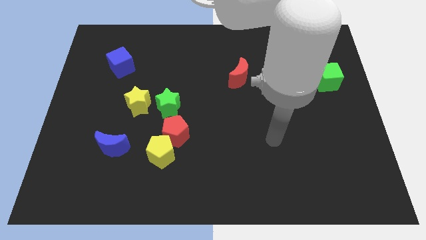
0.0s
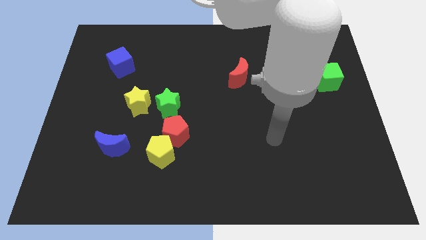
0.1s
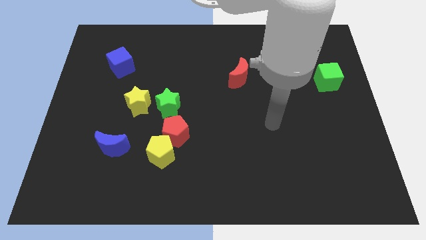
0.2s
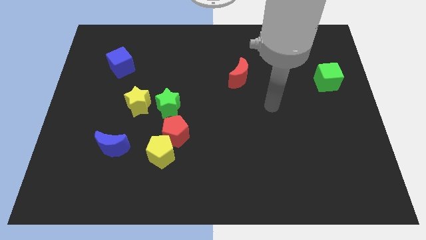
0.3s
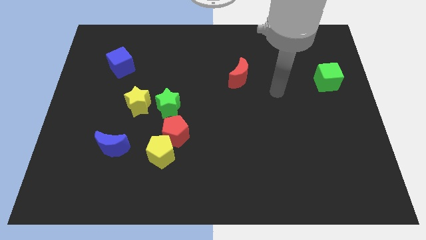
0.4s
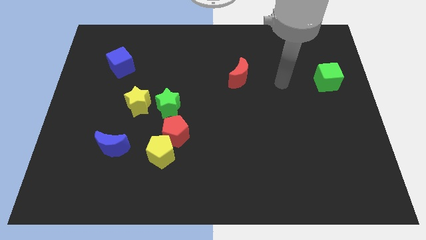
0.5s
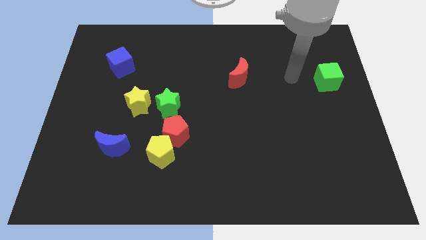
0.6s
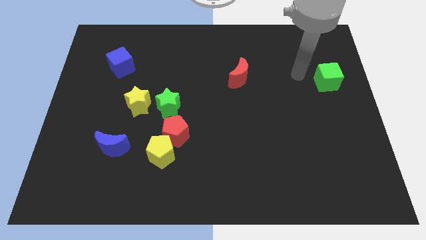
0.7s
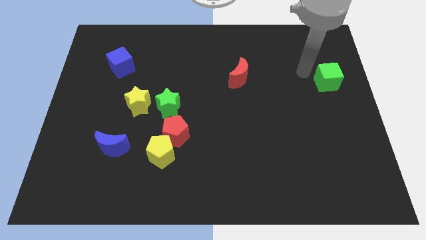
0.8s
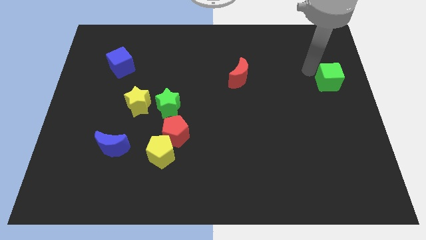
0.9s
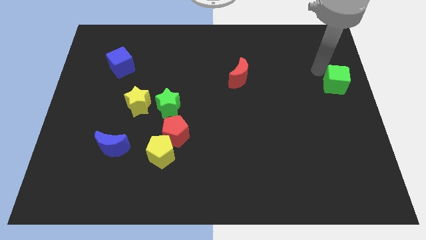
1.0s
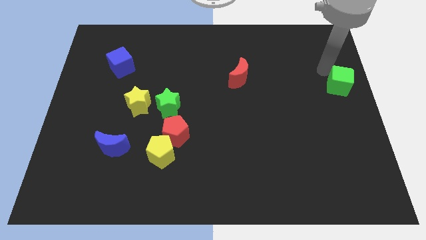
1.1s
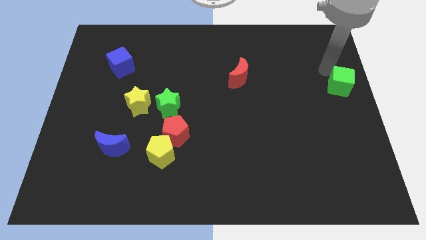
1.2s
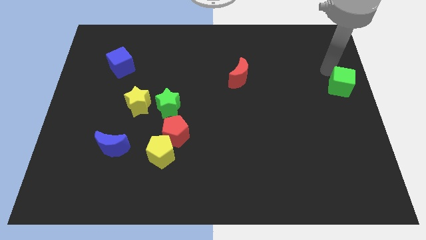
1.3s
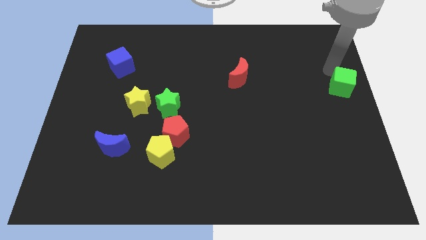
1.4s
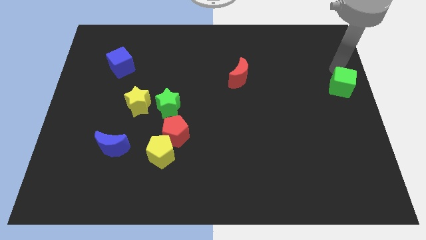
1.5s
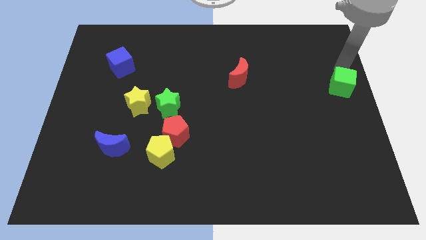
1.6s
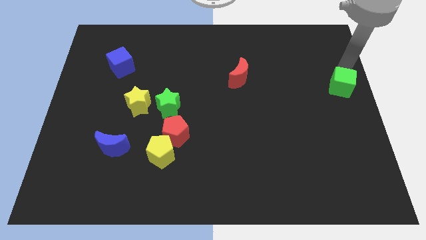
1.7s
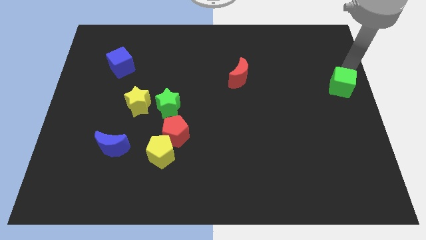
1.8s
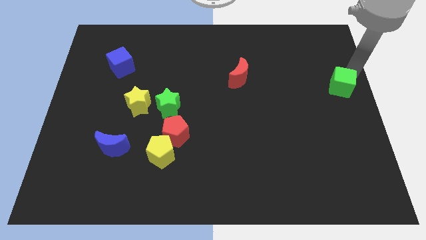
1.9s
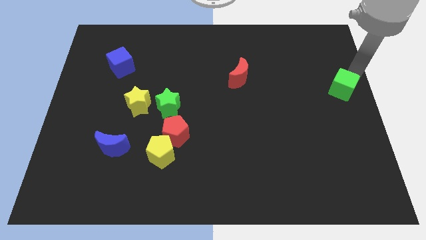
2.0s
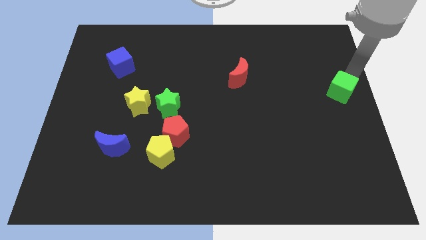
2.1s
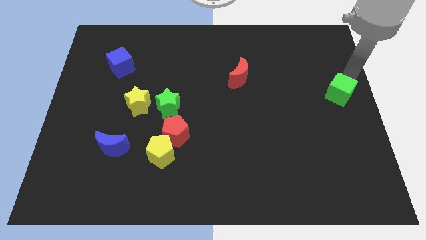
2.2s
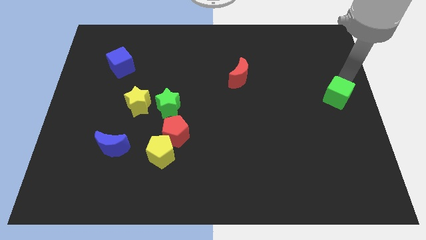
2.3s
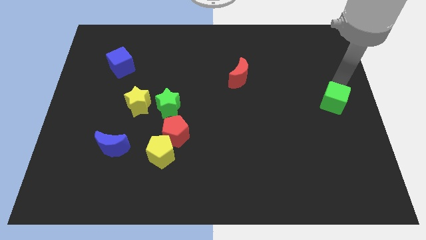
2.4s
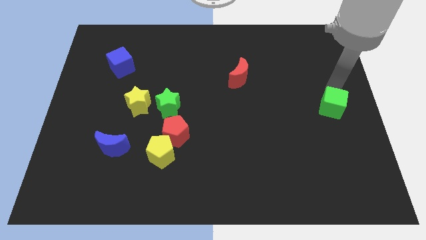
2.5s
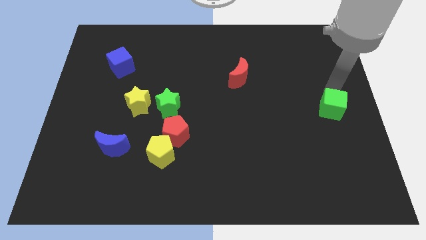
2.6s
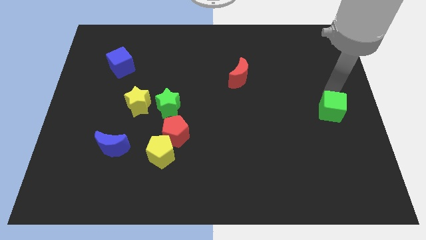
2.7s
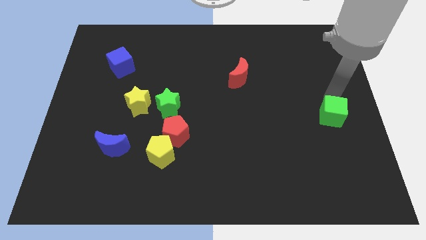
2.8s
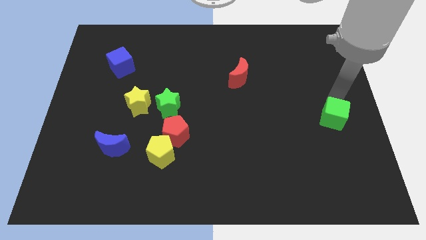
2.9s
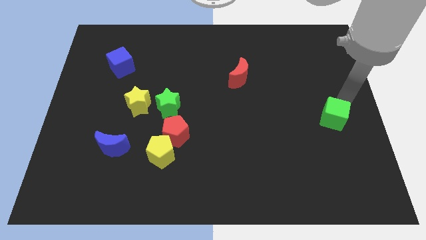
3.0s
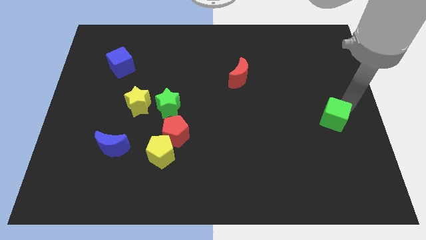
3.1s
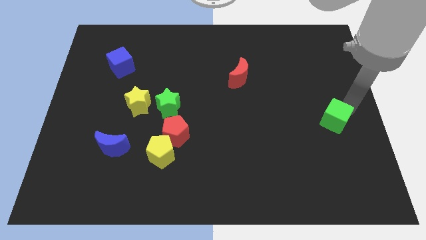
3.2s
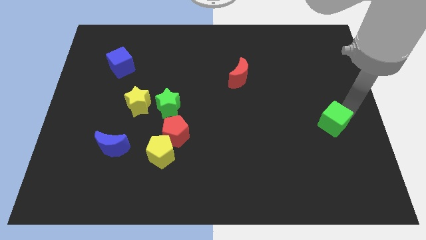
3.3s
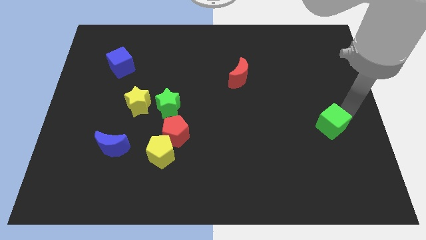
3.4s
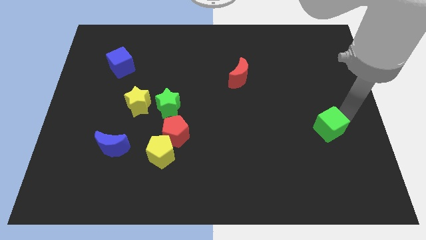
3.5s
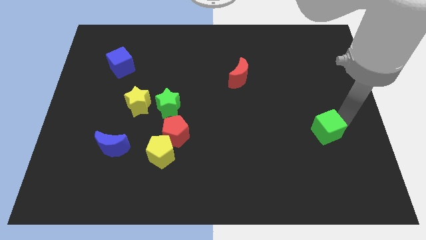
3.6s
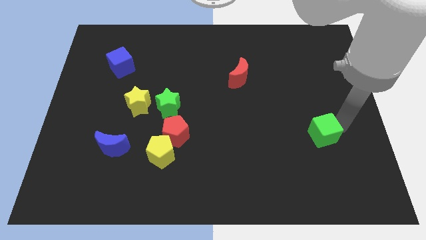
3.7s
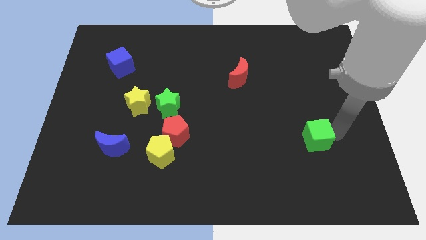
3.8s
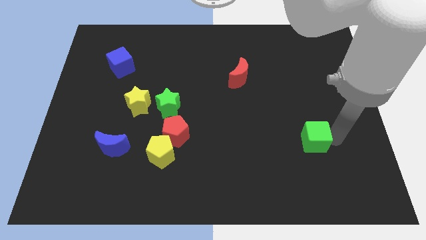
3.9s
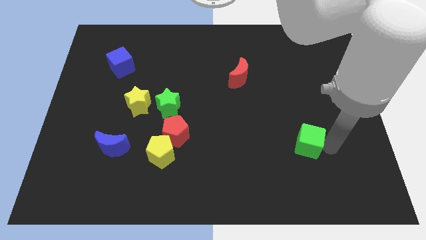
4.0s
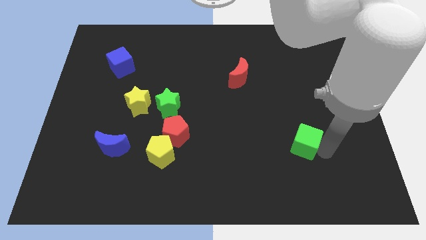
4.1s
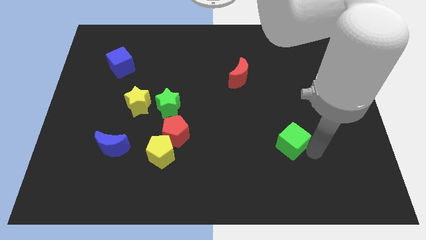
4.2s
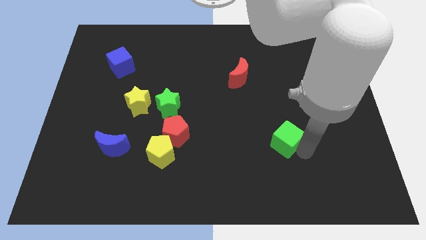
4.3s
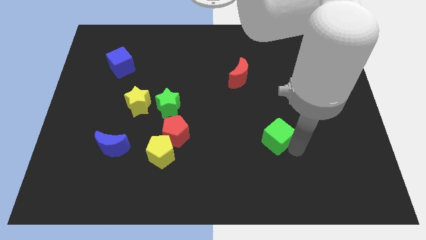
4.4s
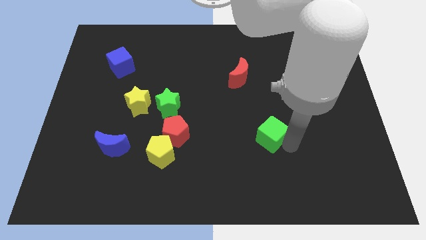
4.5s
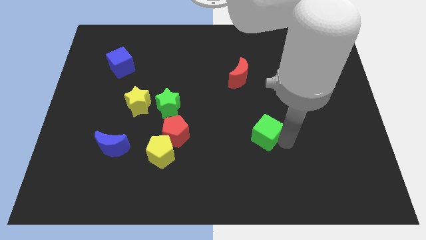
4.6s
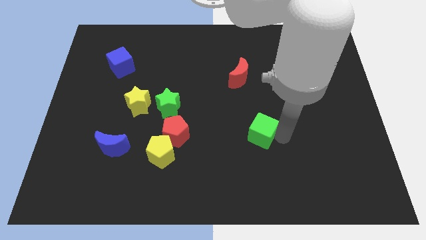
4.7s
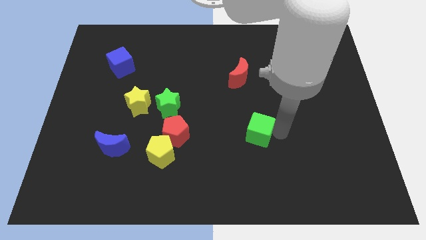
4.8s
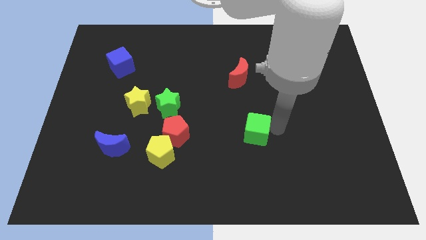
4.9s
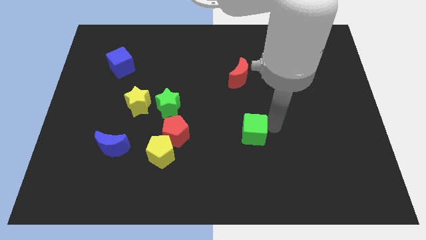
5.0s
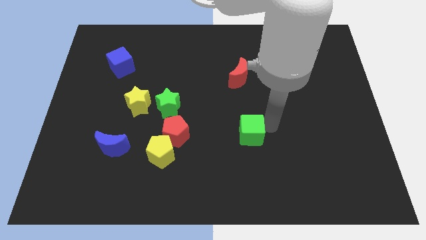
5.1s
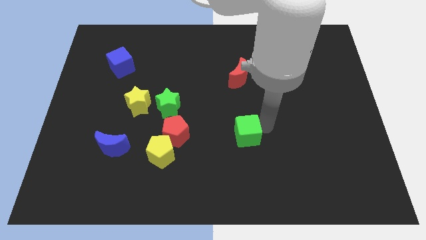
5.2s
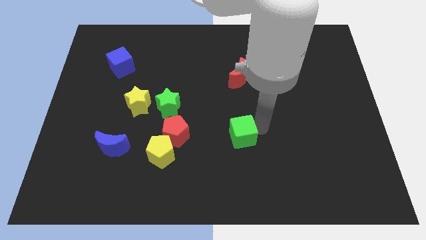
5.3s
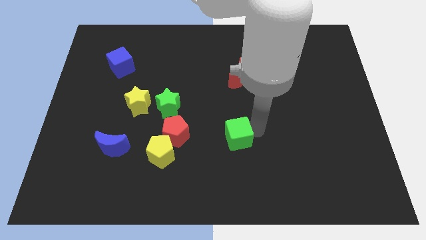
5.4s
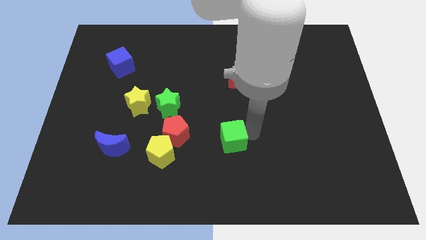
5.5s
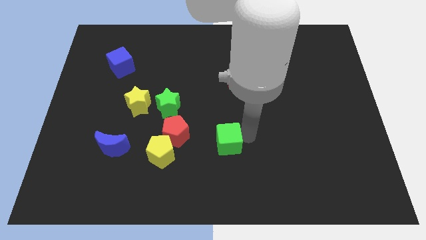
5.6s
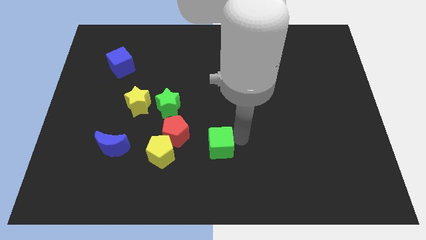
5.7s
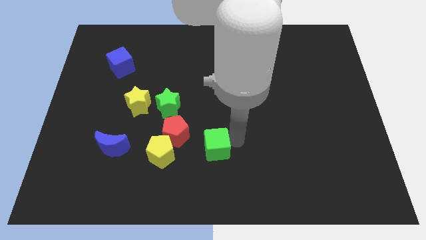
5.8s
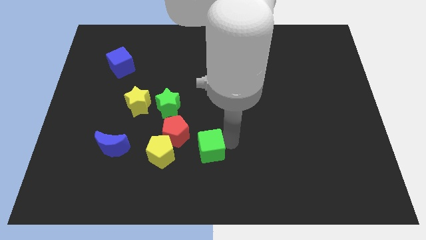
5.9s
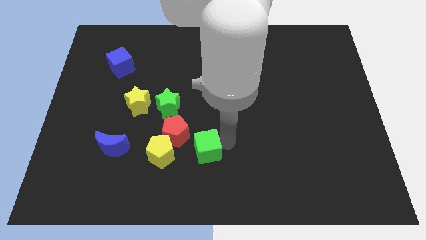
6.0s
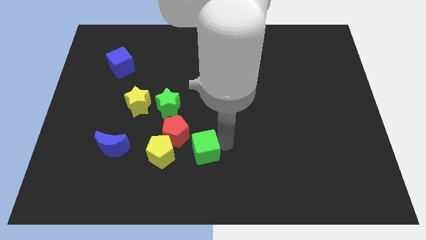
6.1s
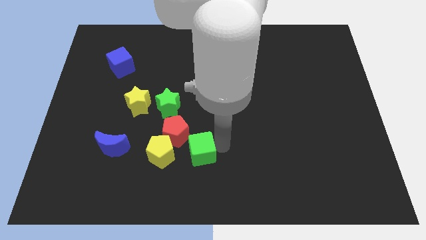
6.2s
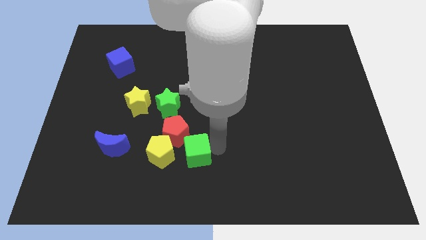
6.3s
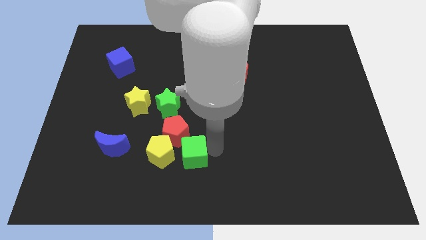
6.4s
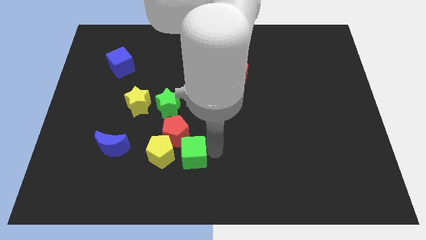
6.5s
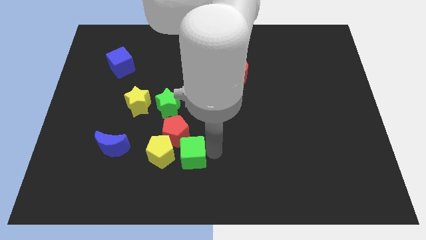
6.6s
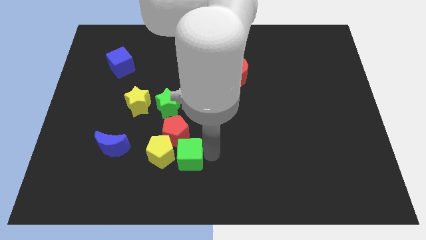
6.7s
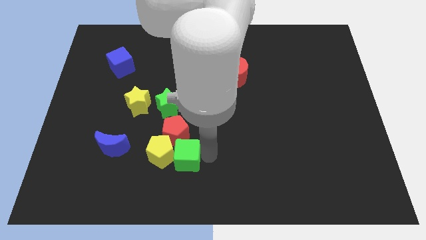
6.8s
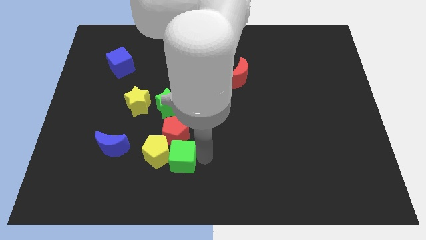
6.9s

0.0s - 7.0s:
slide the green cube towards the yellow pentagon

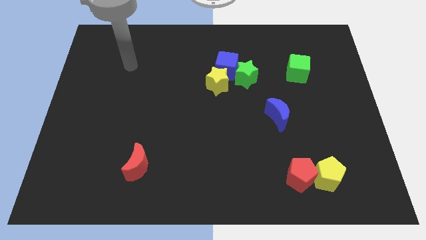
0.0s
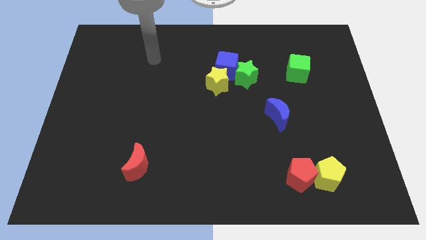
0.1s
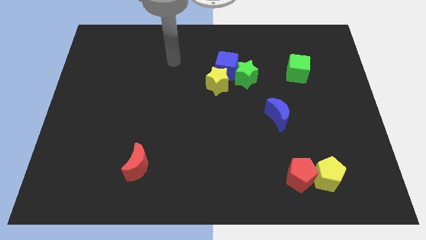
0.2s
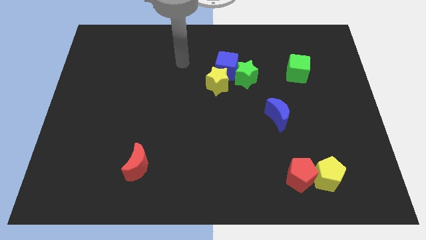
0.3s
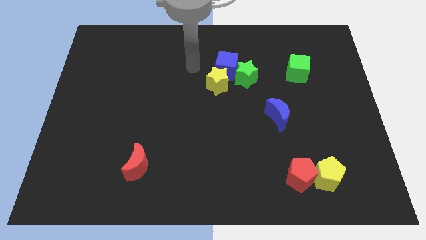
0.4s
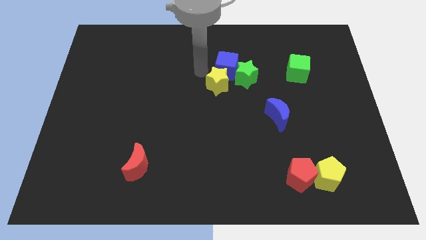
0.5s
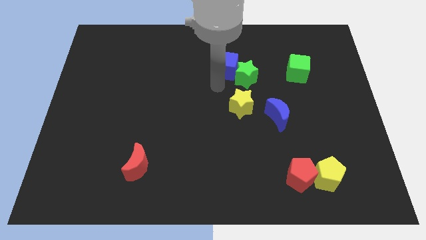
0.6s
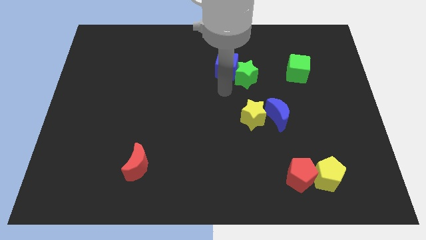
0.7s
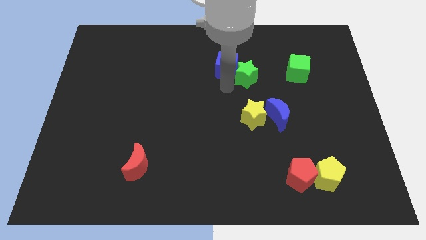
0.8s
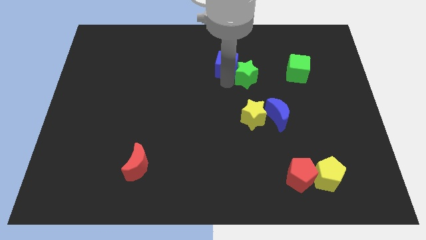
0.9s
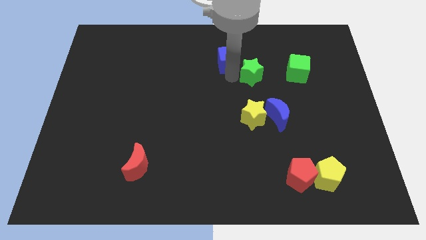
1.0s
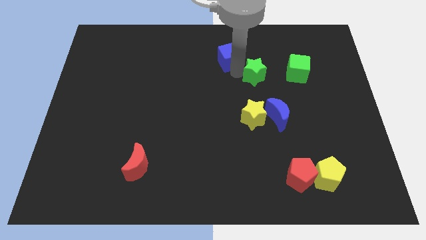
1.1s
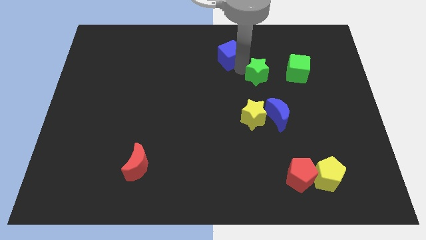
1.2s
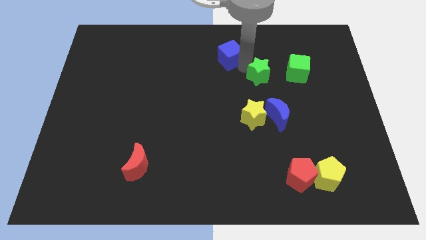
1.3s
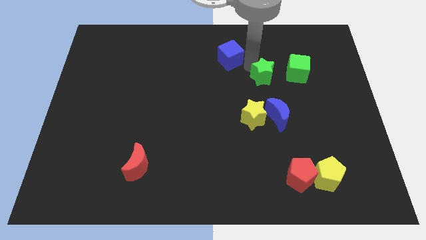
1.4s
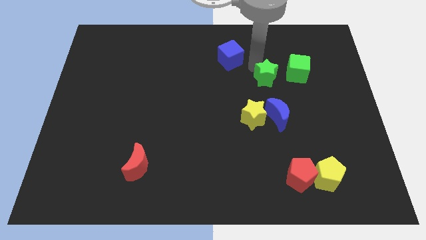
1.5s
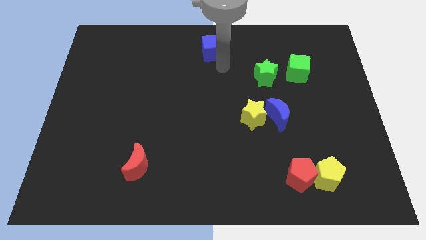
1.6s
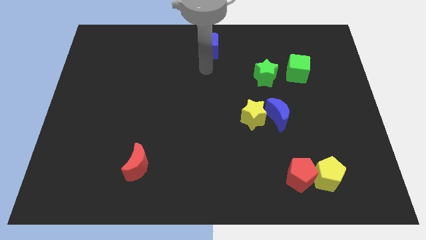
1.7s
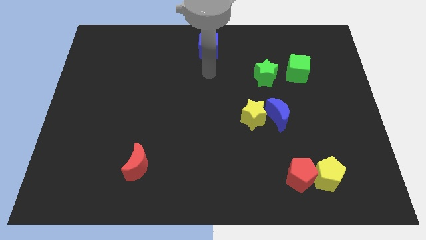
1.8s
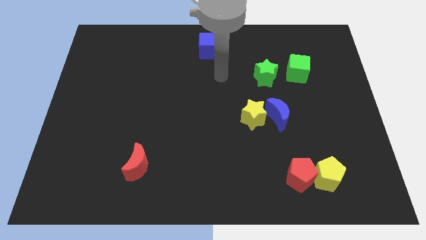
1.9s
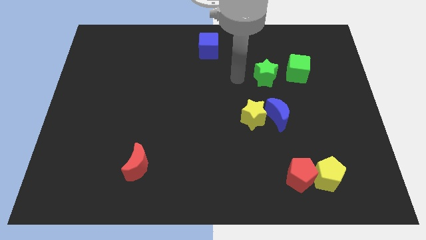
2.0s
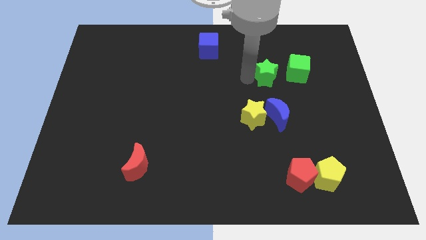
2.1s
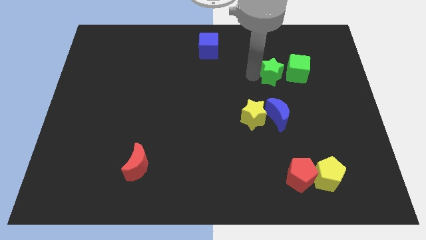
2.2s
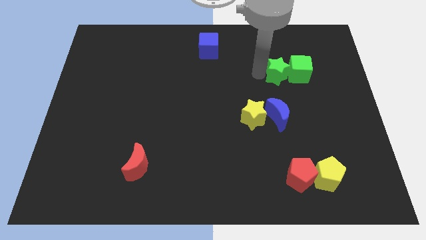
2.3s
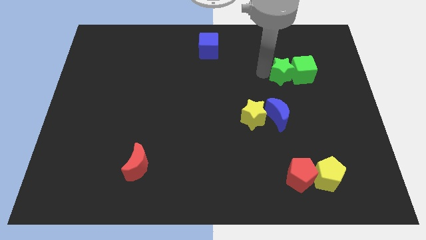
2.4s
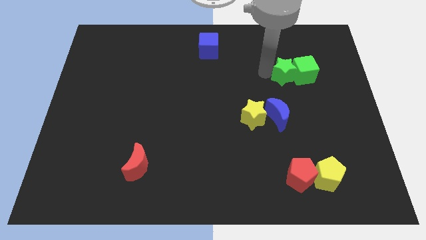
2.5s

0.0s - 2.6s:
slide the green star next to the green cube
